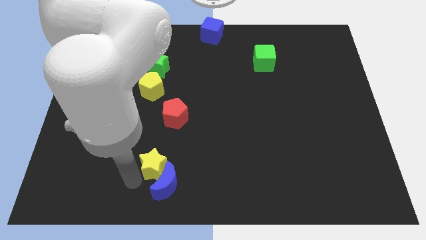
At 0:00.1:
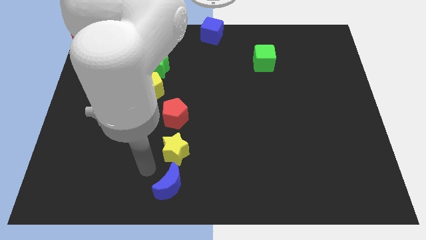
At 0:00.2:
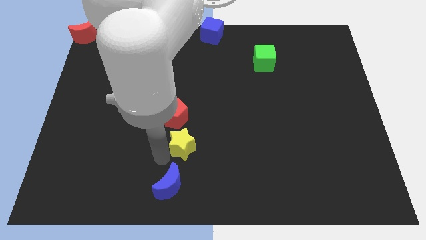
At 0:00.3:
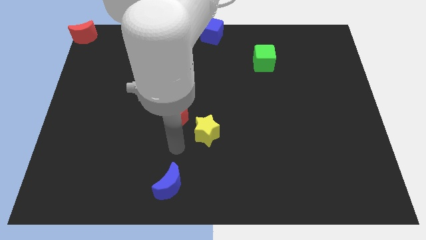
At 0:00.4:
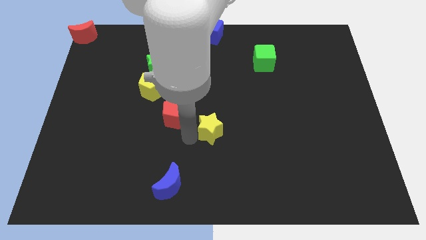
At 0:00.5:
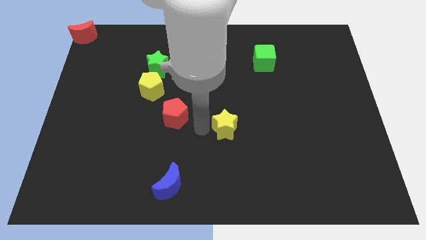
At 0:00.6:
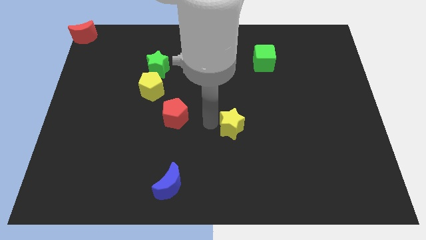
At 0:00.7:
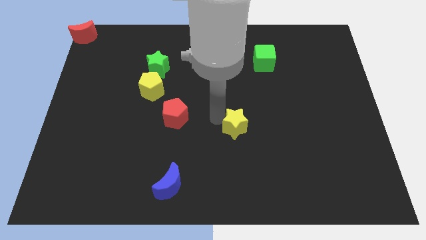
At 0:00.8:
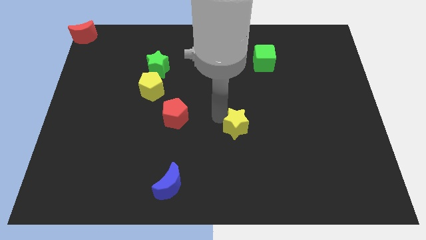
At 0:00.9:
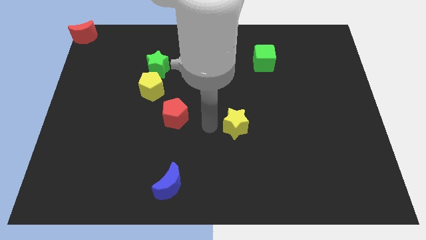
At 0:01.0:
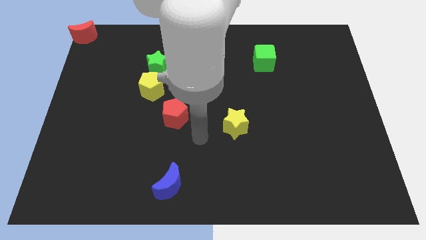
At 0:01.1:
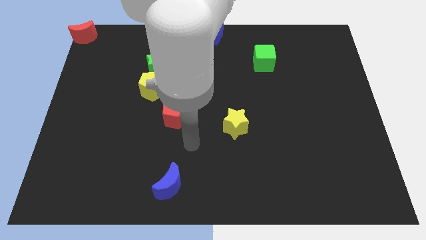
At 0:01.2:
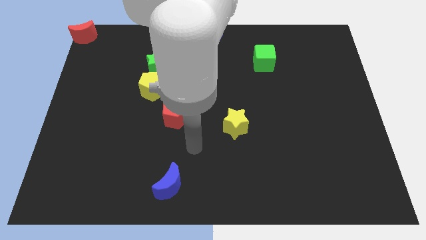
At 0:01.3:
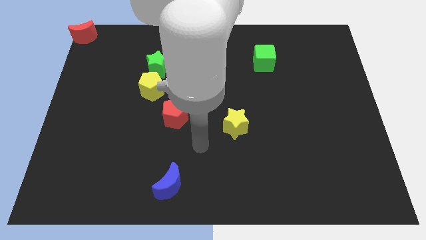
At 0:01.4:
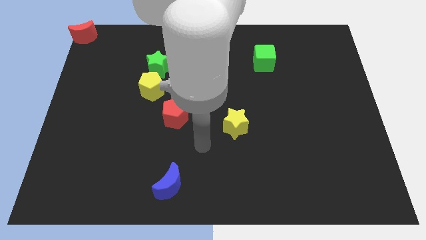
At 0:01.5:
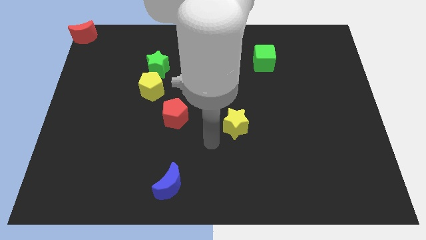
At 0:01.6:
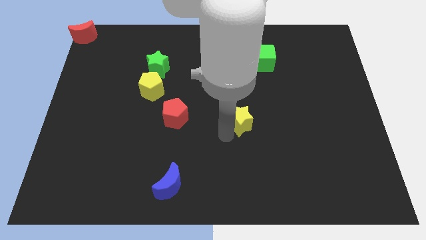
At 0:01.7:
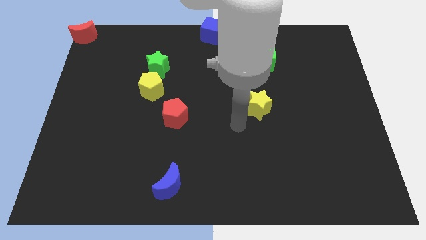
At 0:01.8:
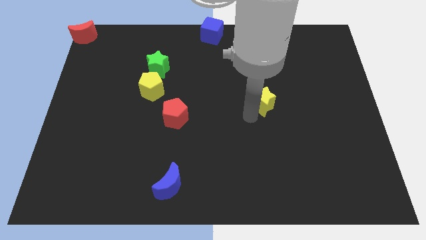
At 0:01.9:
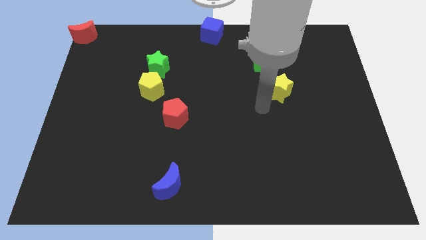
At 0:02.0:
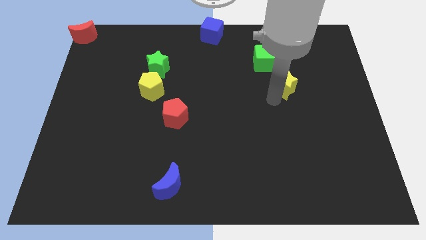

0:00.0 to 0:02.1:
place yellow star below the green cube

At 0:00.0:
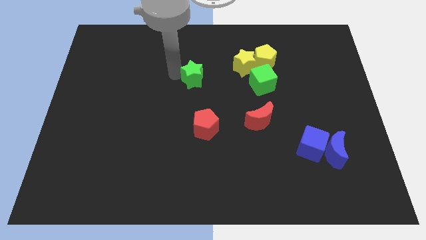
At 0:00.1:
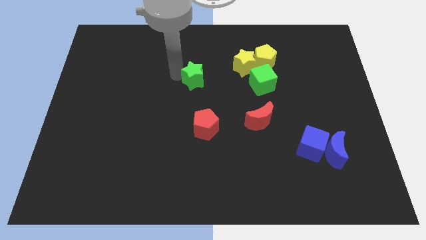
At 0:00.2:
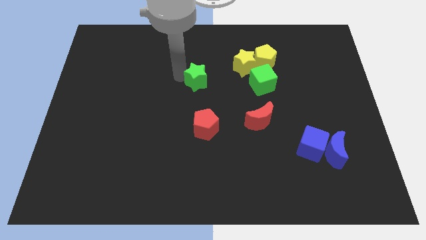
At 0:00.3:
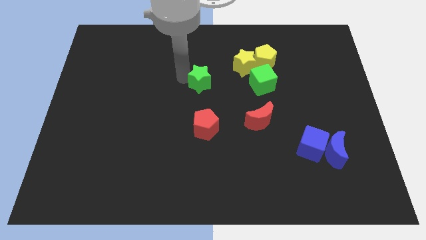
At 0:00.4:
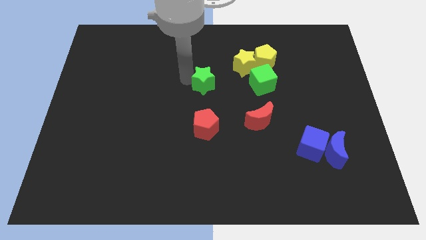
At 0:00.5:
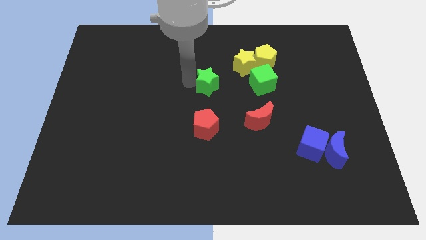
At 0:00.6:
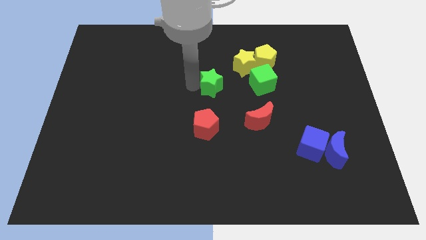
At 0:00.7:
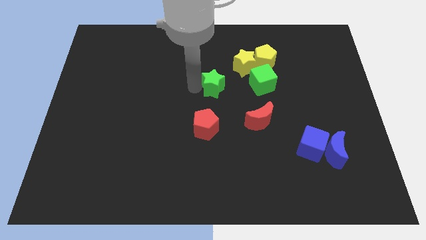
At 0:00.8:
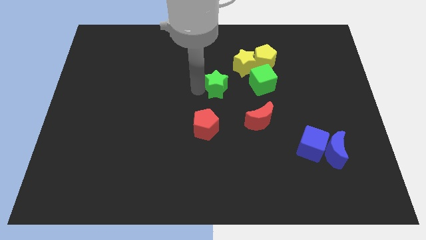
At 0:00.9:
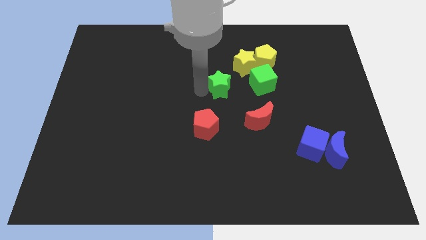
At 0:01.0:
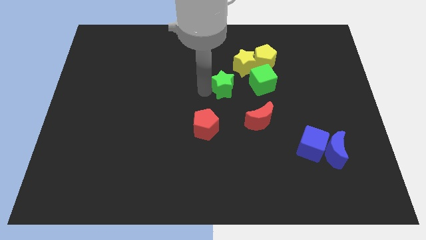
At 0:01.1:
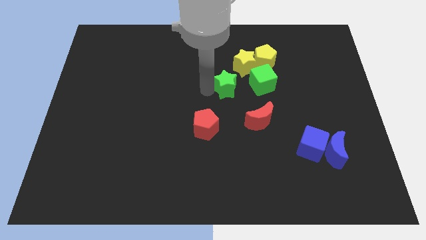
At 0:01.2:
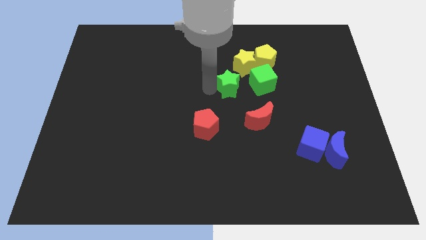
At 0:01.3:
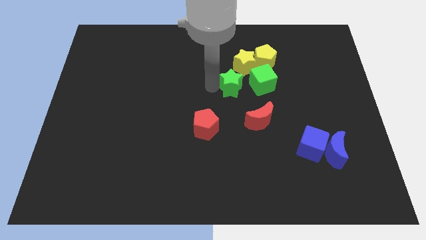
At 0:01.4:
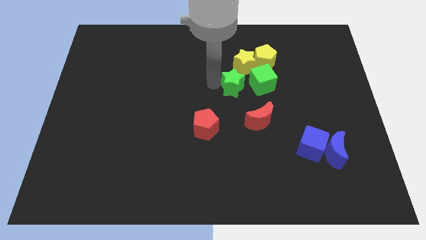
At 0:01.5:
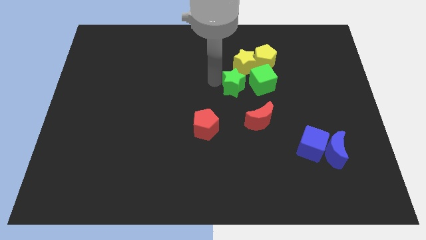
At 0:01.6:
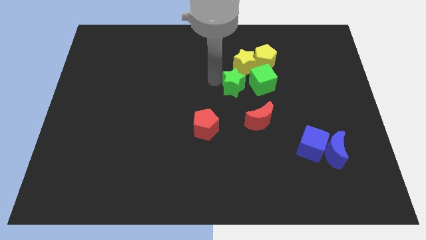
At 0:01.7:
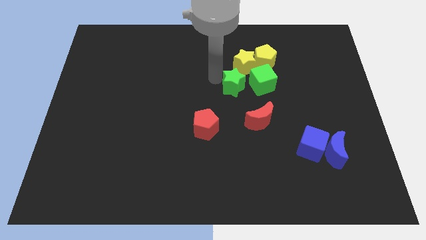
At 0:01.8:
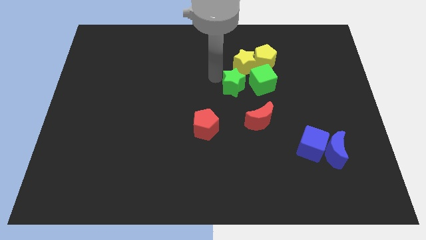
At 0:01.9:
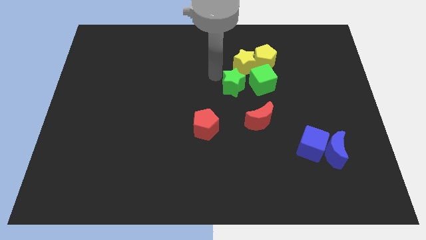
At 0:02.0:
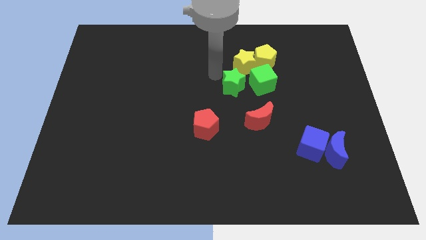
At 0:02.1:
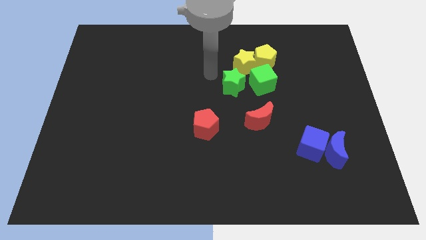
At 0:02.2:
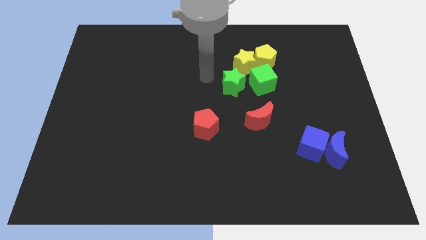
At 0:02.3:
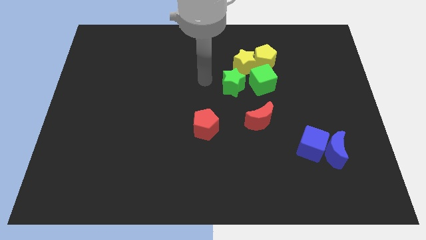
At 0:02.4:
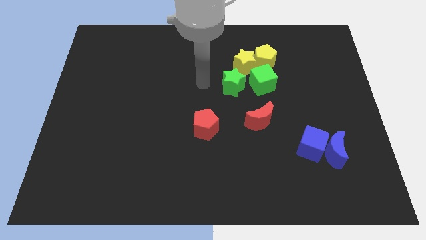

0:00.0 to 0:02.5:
move green star to the left of green cube

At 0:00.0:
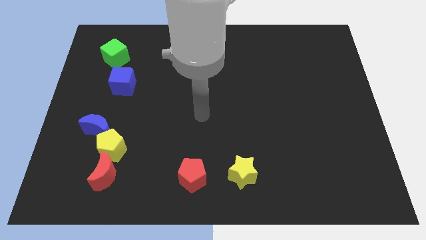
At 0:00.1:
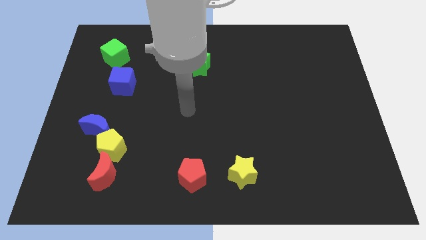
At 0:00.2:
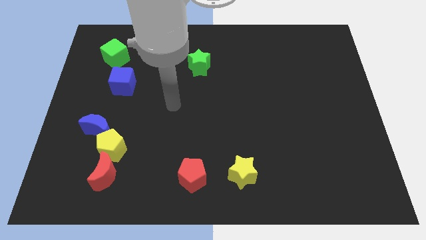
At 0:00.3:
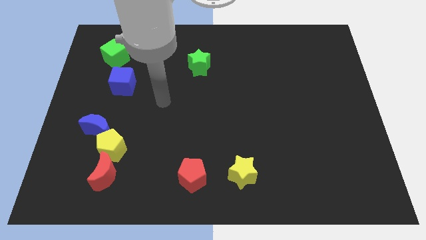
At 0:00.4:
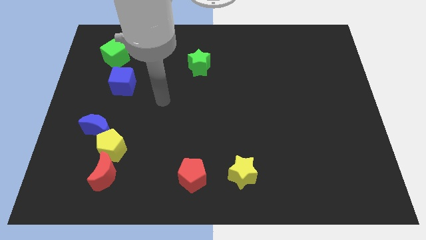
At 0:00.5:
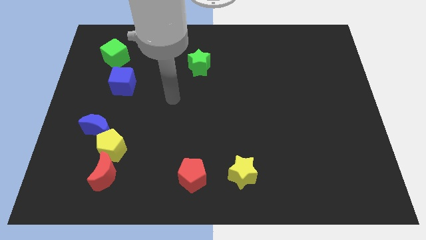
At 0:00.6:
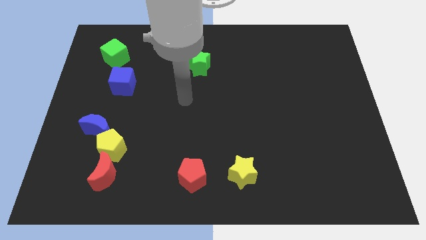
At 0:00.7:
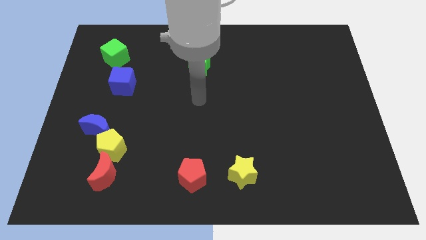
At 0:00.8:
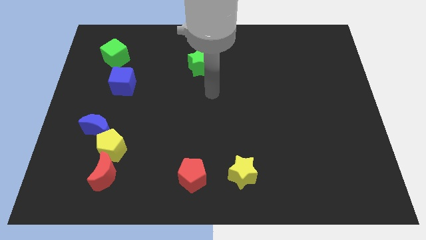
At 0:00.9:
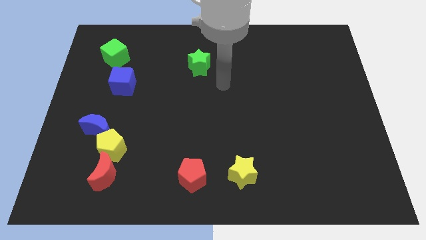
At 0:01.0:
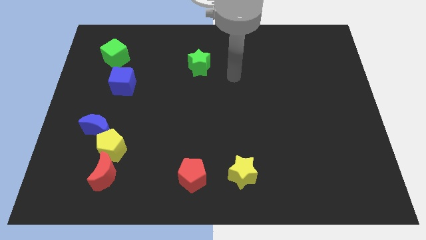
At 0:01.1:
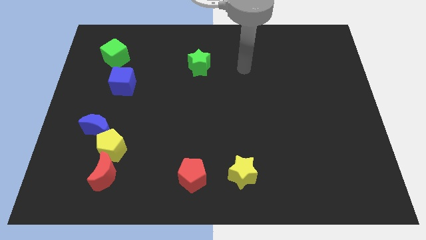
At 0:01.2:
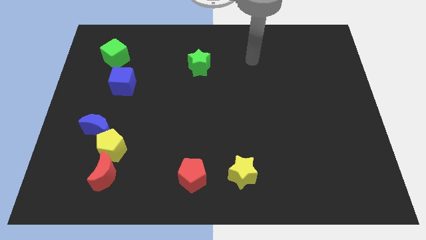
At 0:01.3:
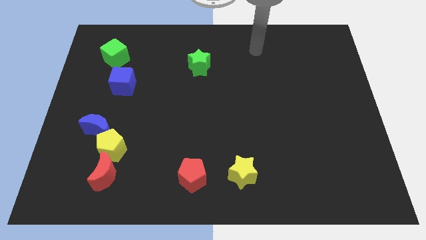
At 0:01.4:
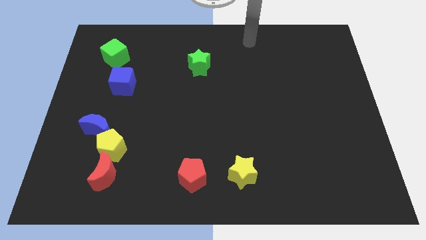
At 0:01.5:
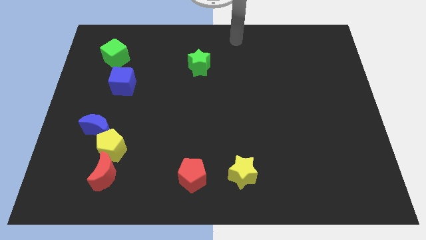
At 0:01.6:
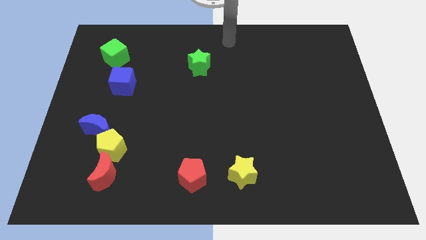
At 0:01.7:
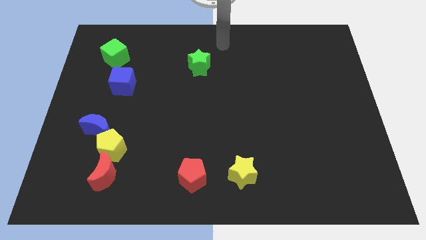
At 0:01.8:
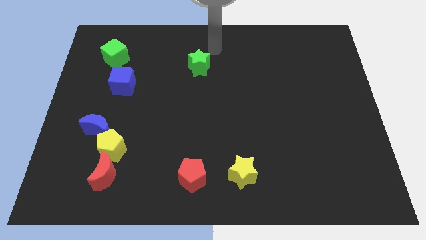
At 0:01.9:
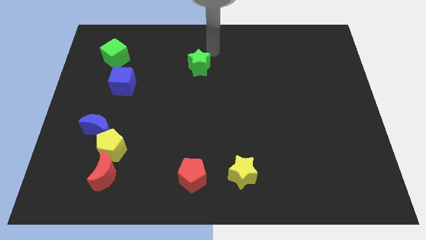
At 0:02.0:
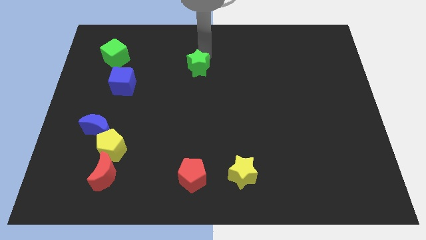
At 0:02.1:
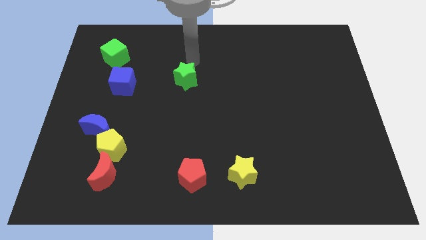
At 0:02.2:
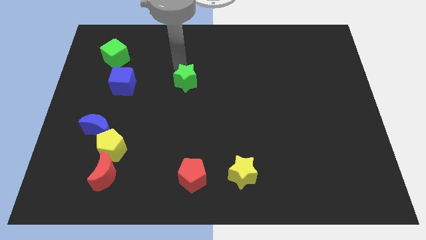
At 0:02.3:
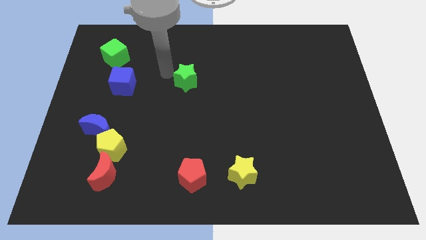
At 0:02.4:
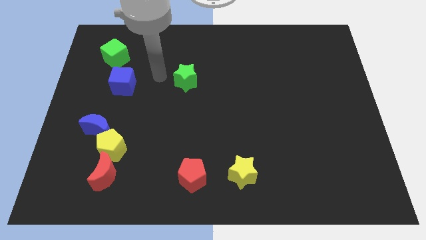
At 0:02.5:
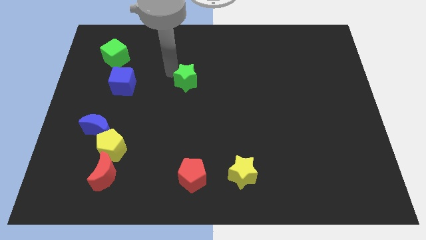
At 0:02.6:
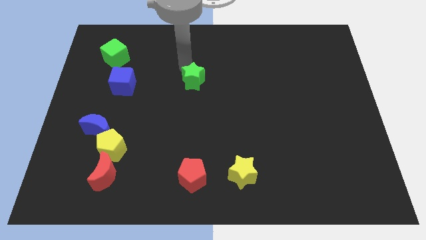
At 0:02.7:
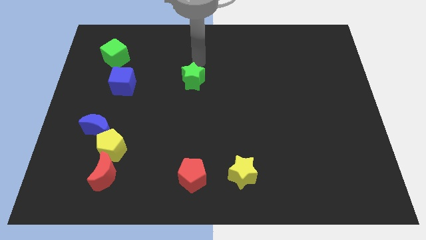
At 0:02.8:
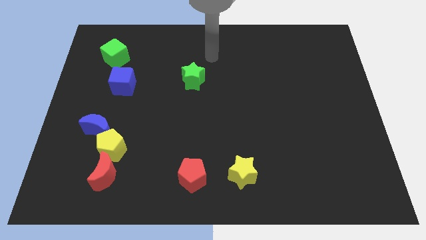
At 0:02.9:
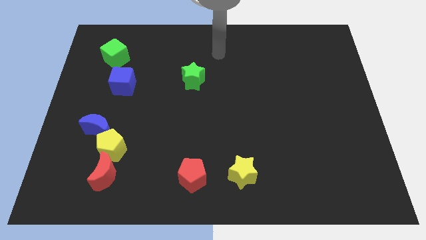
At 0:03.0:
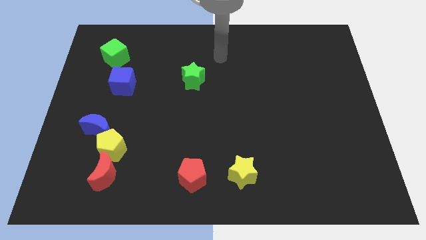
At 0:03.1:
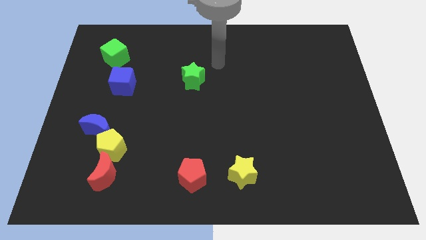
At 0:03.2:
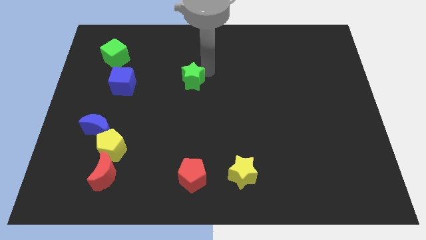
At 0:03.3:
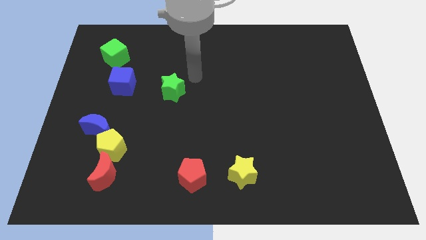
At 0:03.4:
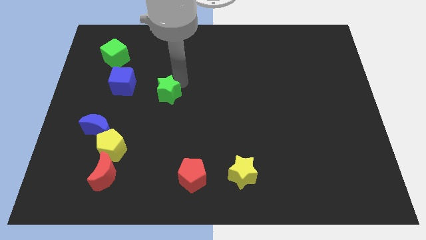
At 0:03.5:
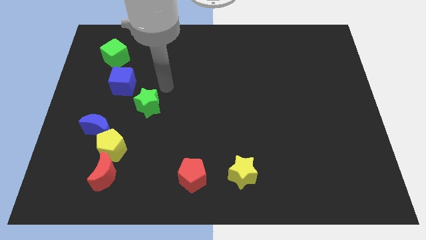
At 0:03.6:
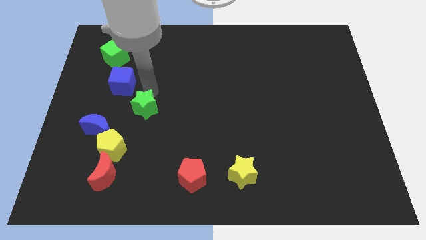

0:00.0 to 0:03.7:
place the green star diagonally bottom right to the blue cube

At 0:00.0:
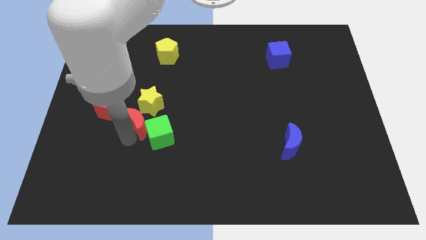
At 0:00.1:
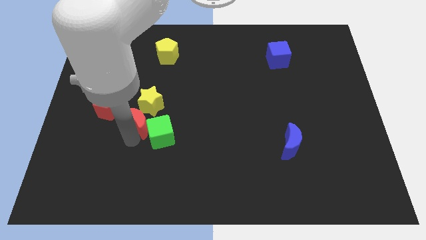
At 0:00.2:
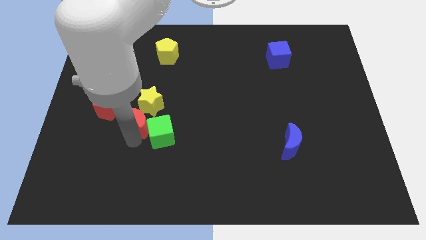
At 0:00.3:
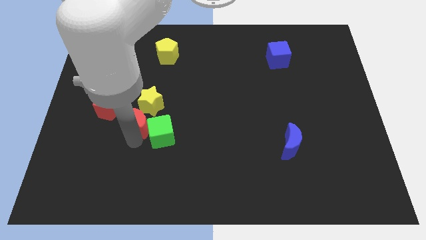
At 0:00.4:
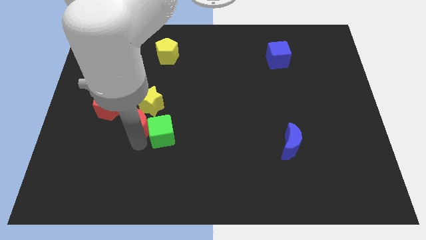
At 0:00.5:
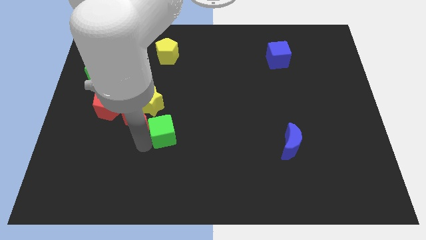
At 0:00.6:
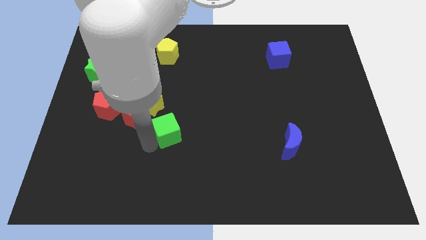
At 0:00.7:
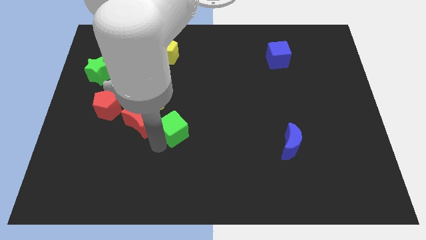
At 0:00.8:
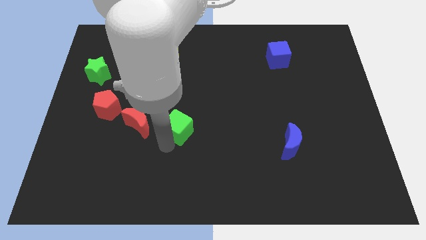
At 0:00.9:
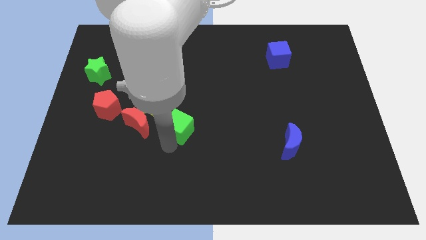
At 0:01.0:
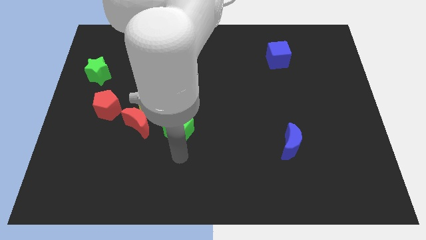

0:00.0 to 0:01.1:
separate green cube from red moon
